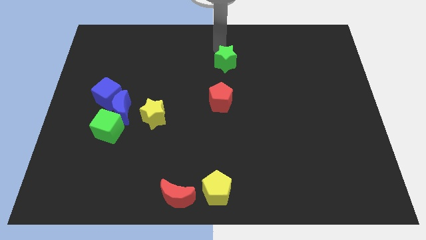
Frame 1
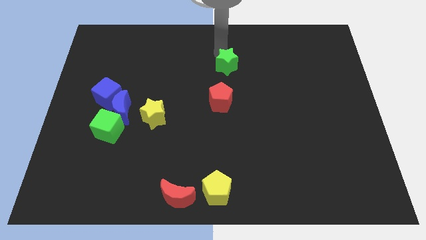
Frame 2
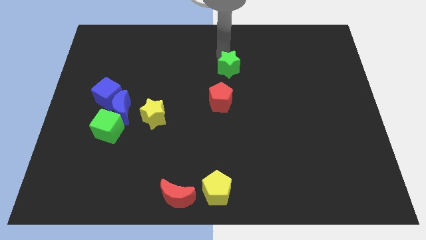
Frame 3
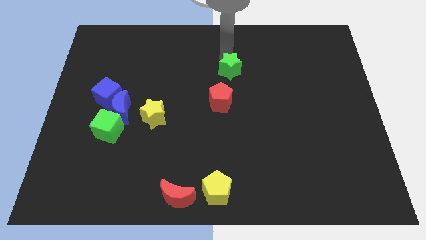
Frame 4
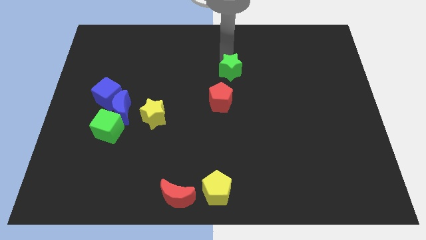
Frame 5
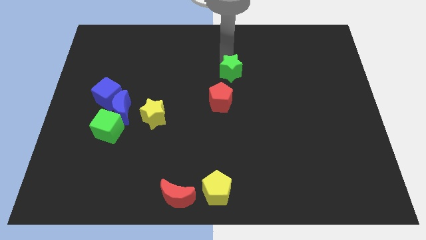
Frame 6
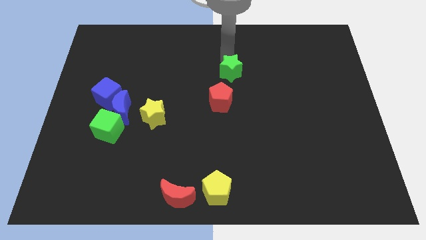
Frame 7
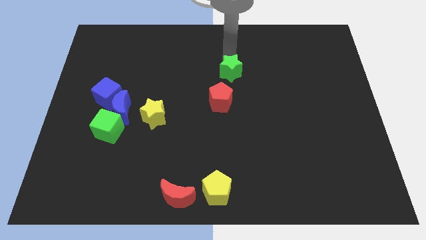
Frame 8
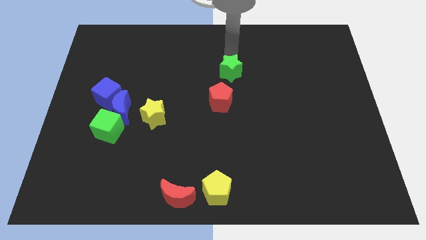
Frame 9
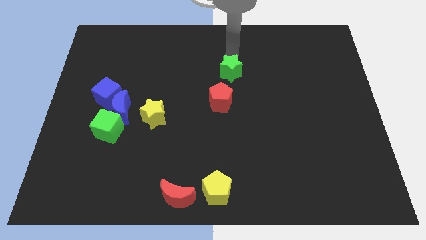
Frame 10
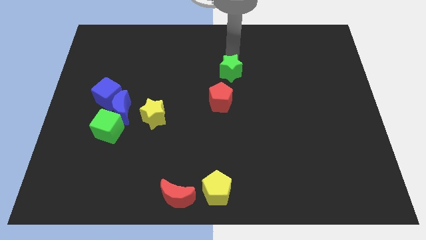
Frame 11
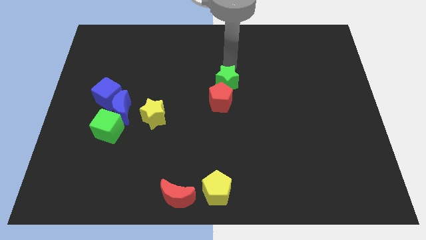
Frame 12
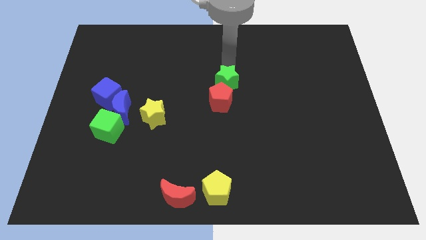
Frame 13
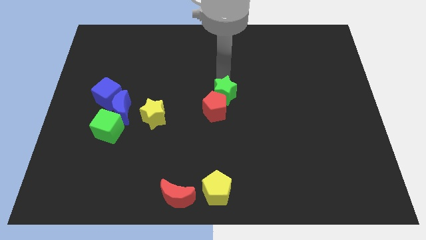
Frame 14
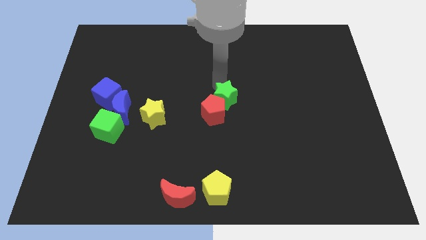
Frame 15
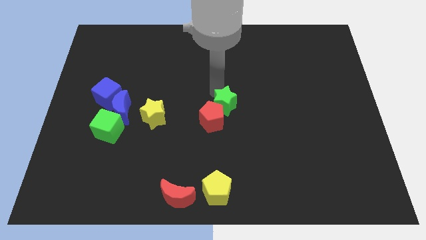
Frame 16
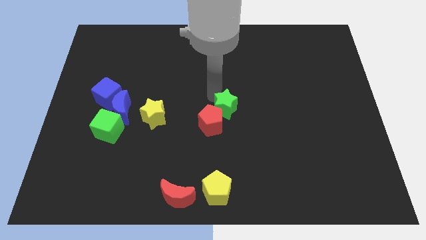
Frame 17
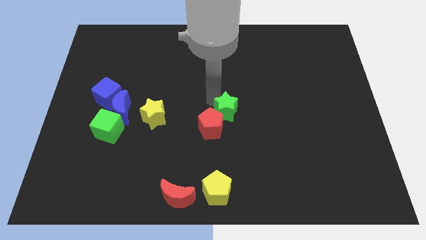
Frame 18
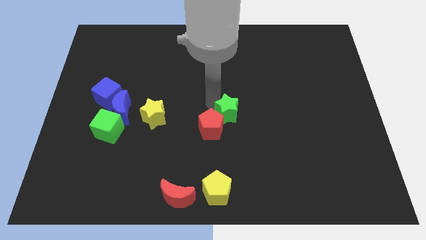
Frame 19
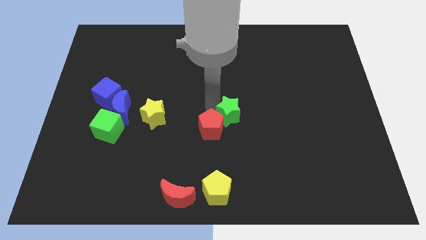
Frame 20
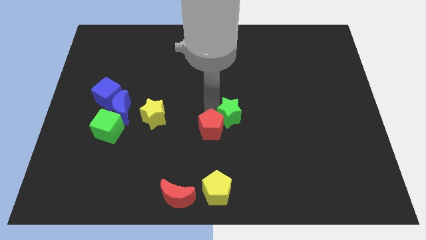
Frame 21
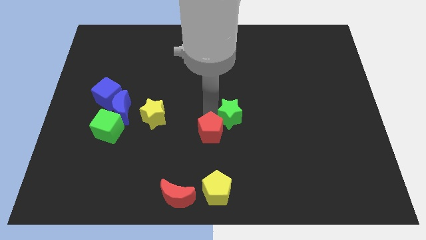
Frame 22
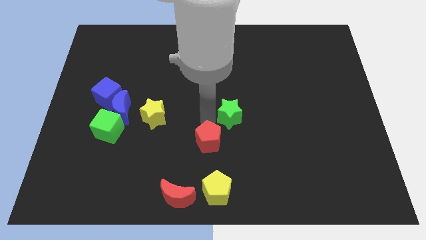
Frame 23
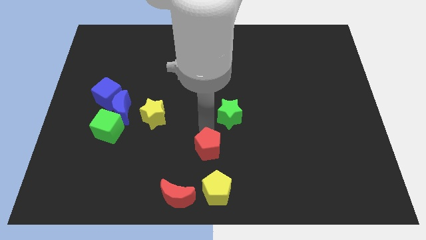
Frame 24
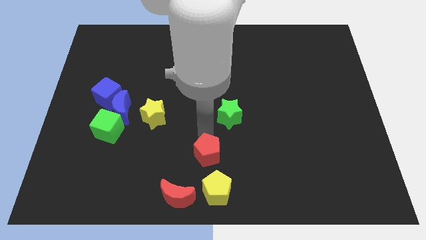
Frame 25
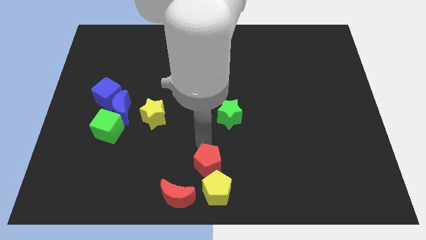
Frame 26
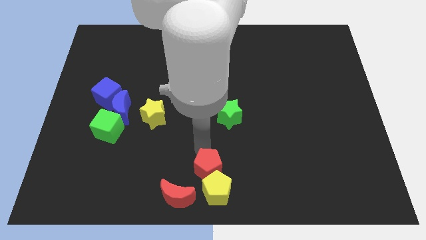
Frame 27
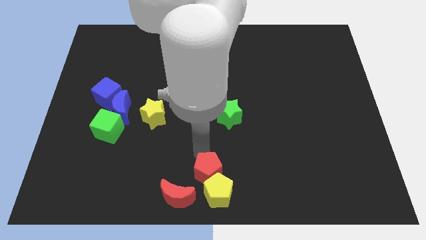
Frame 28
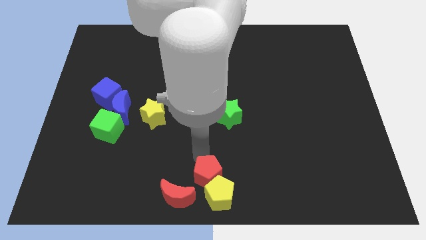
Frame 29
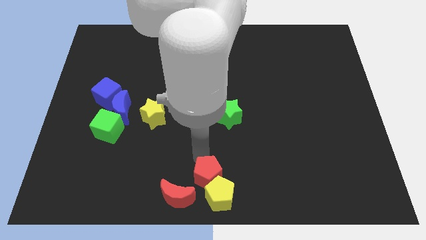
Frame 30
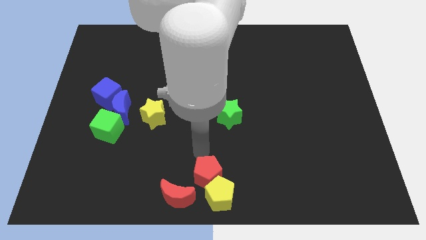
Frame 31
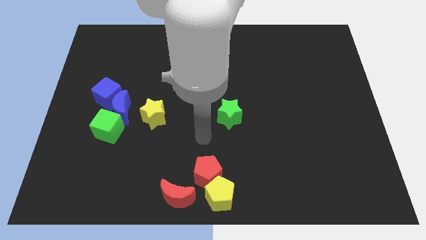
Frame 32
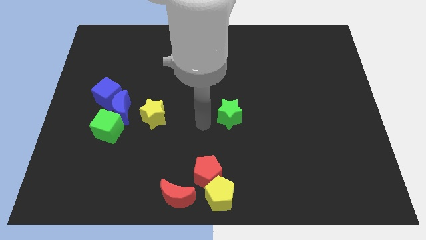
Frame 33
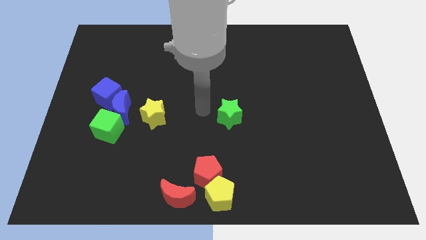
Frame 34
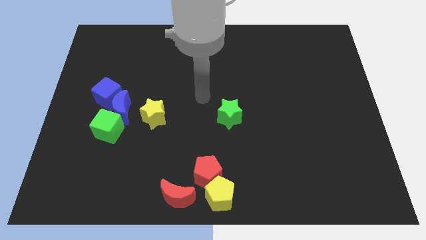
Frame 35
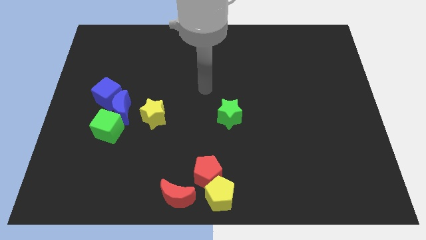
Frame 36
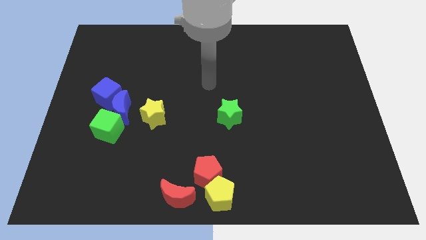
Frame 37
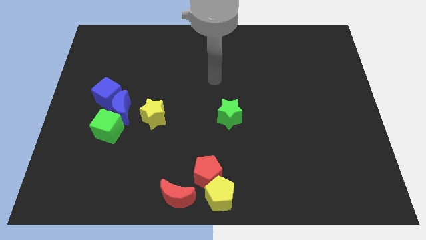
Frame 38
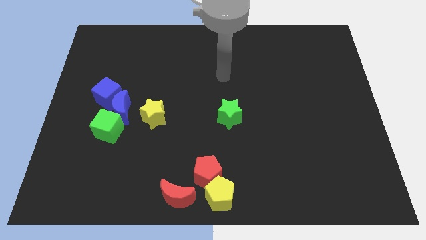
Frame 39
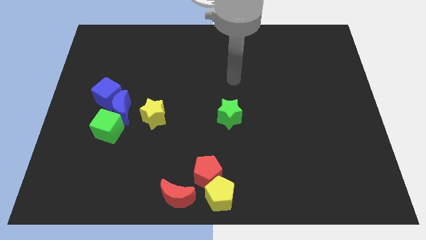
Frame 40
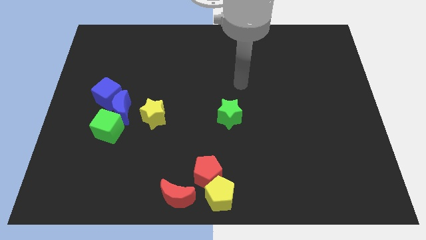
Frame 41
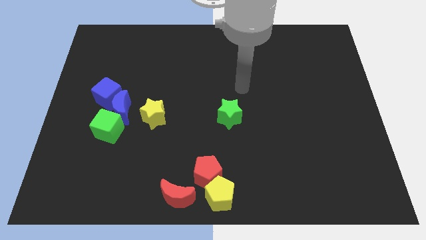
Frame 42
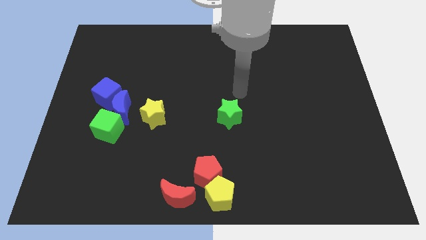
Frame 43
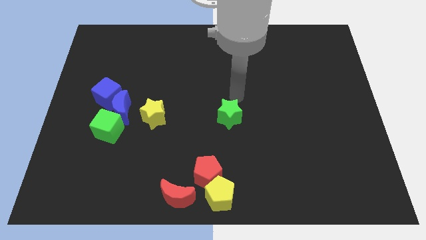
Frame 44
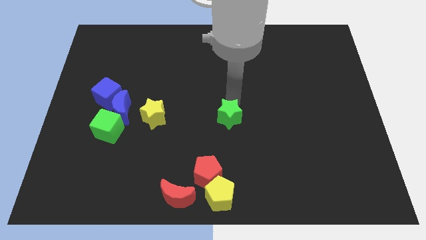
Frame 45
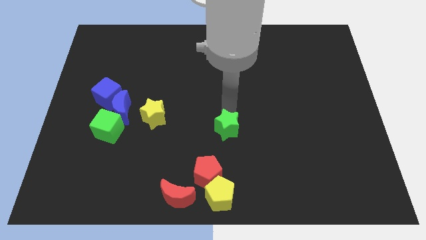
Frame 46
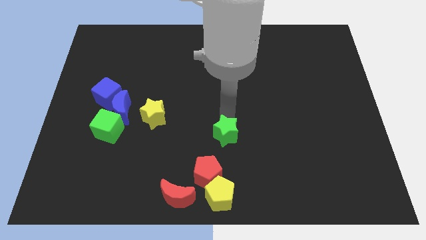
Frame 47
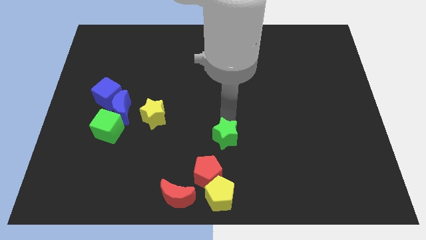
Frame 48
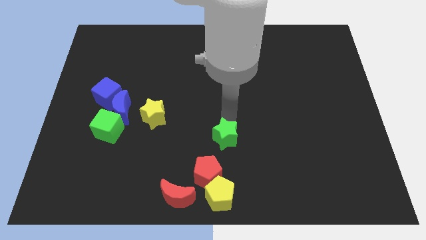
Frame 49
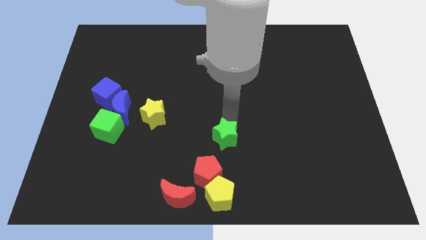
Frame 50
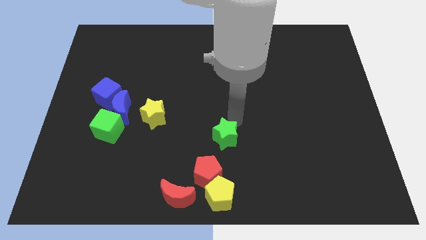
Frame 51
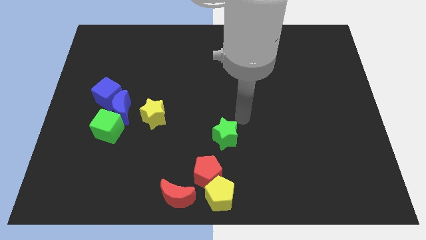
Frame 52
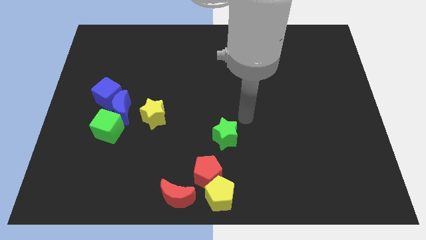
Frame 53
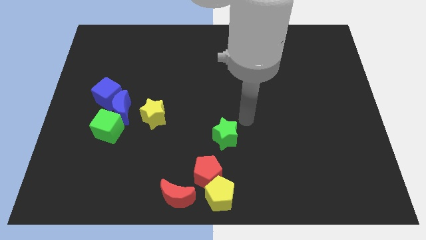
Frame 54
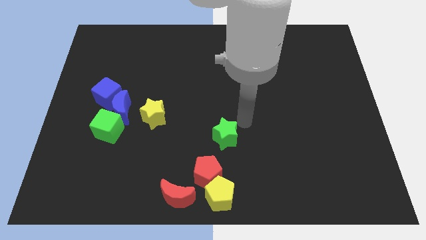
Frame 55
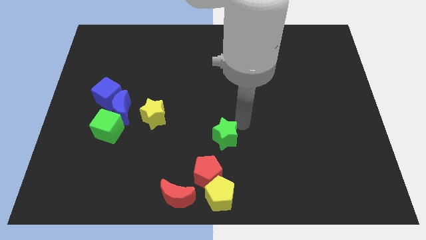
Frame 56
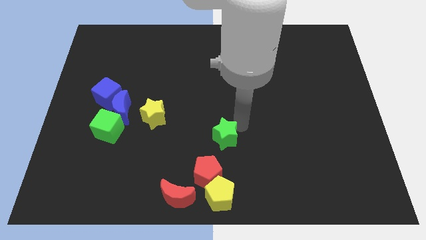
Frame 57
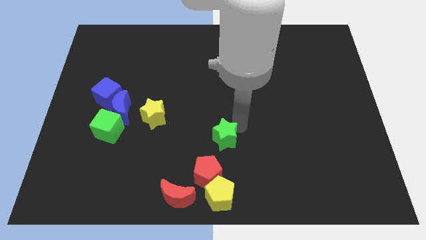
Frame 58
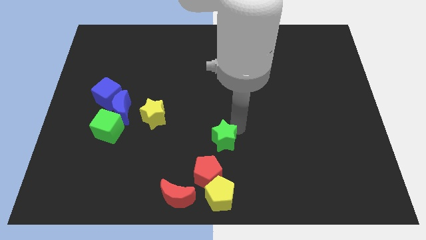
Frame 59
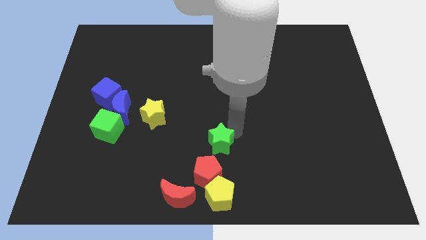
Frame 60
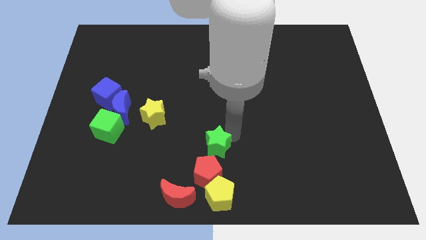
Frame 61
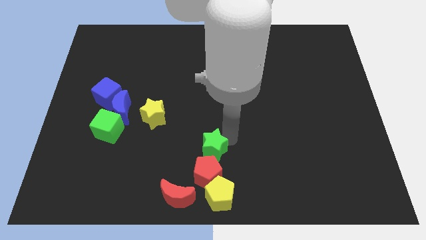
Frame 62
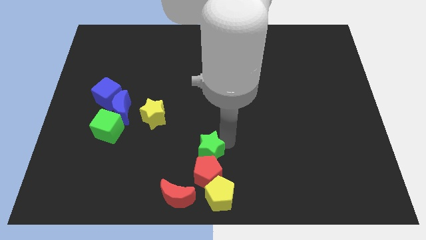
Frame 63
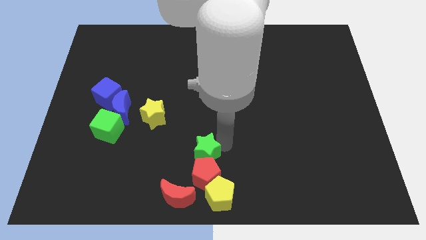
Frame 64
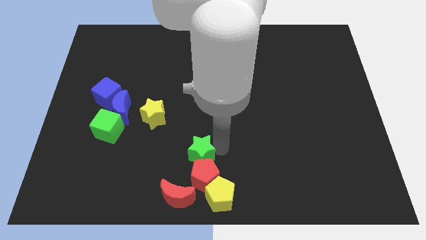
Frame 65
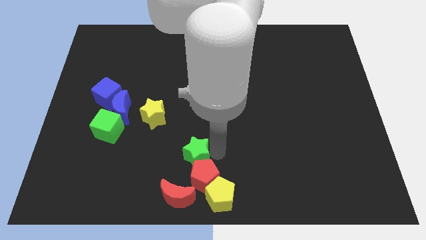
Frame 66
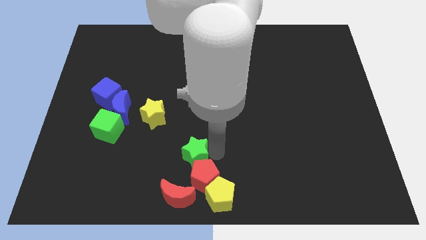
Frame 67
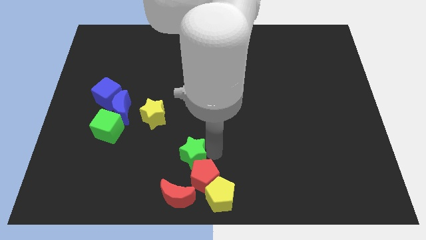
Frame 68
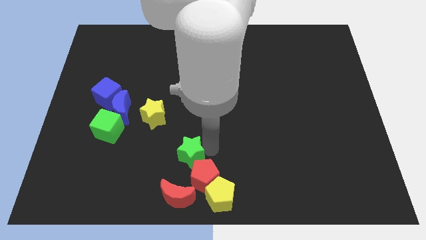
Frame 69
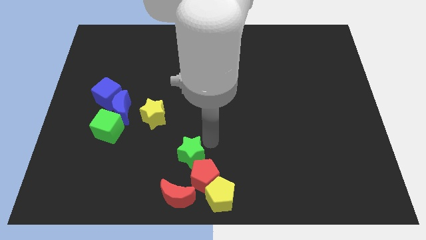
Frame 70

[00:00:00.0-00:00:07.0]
move the green star and red pentagon to the top of the yellow pentagon

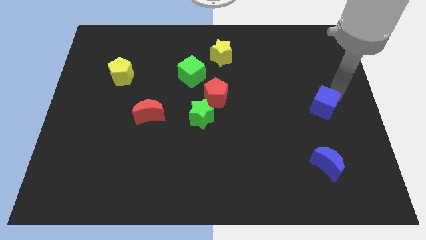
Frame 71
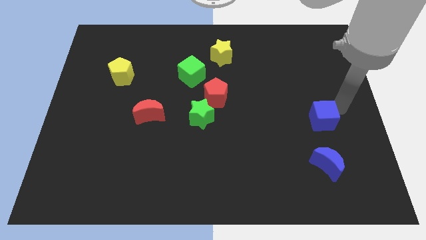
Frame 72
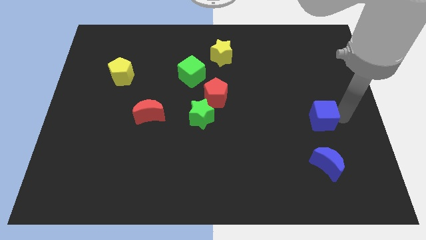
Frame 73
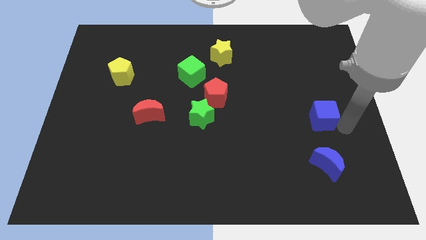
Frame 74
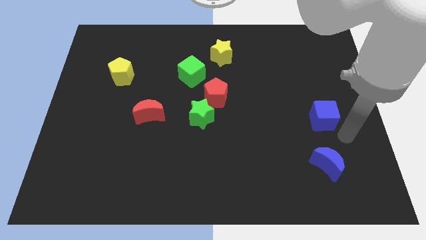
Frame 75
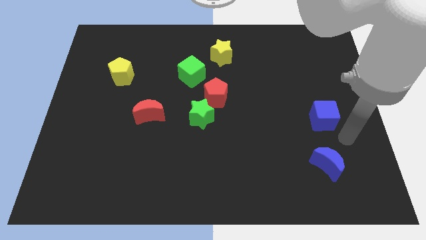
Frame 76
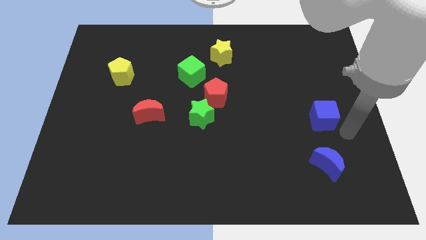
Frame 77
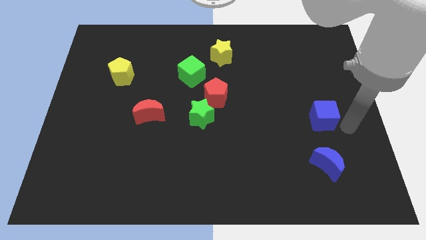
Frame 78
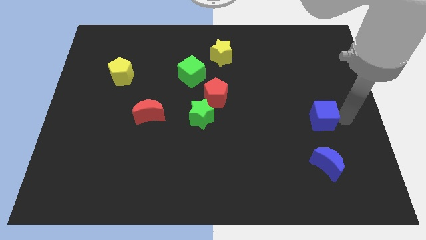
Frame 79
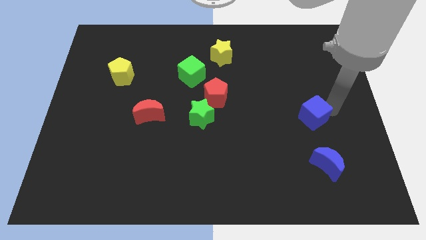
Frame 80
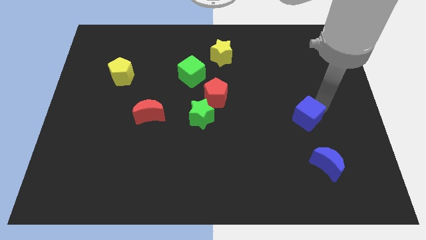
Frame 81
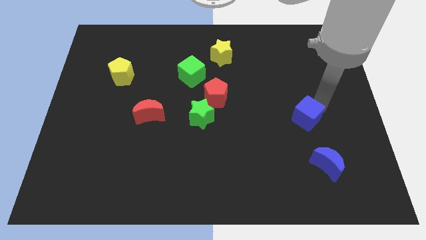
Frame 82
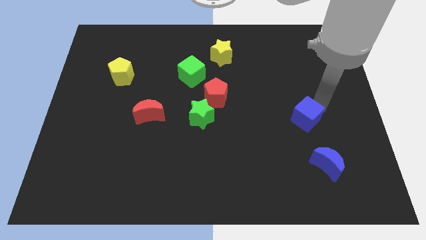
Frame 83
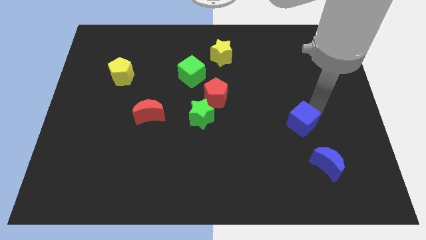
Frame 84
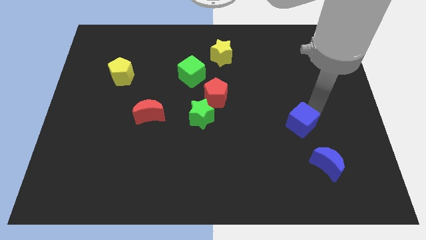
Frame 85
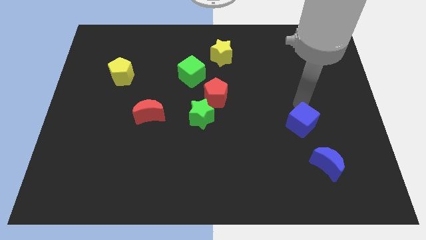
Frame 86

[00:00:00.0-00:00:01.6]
slide the blue cube right to the green star

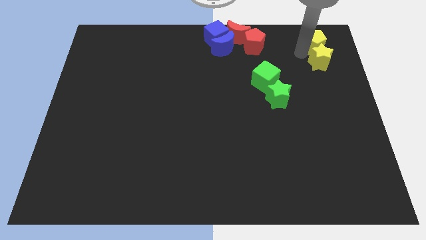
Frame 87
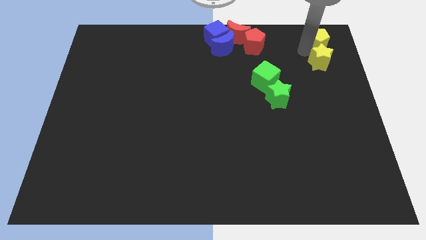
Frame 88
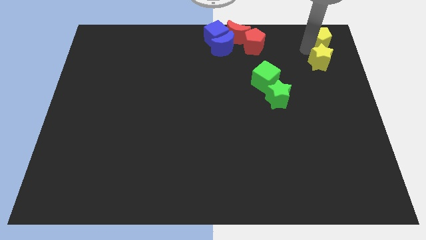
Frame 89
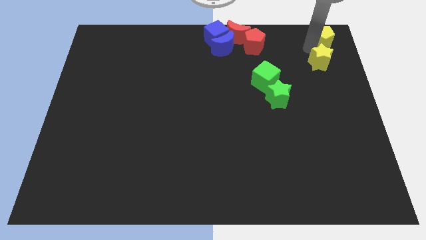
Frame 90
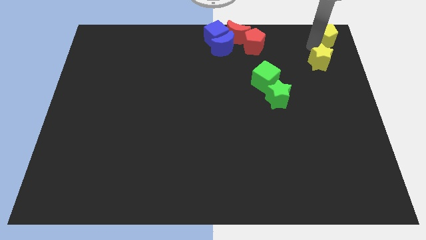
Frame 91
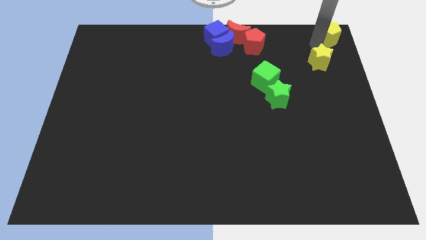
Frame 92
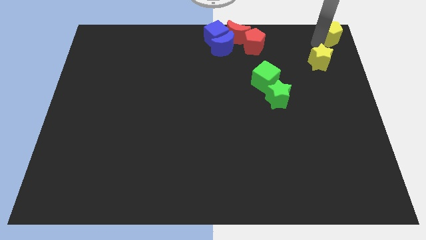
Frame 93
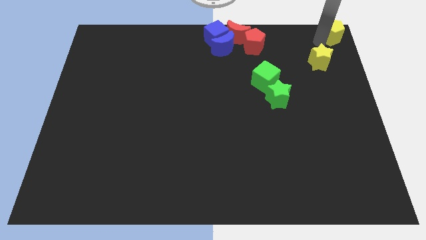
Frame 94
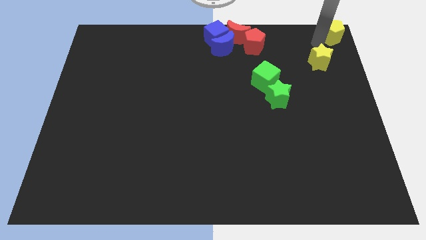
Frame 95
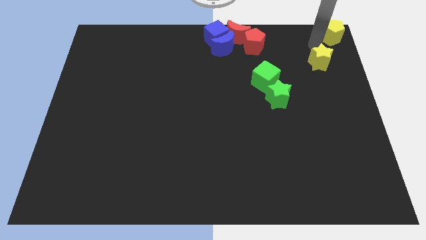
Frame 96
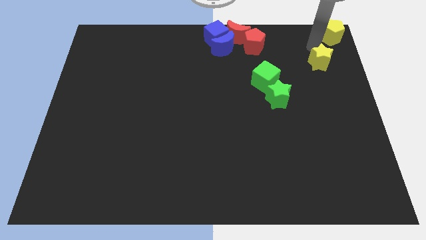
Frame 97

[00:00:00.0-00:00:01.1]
push the yellow pentagon towards the top right corner of the board
